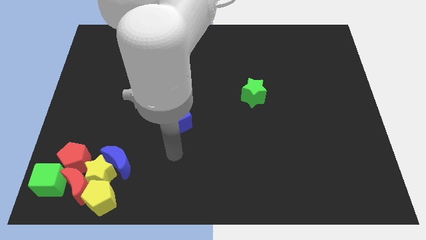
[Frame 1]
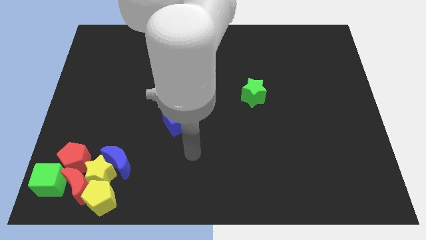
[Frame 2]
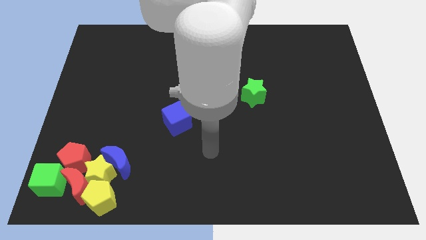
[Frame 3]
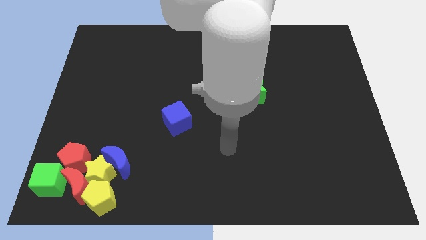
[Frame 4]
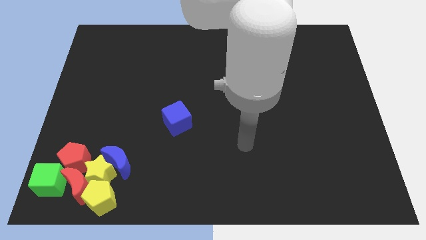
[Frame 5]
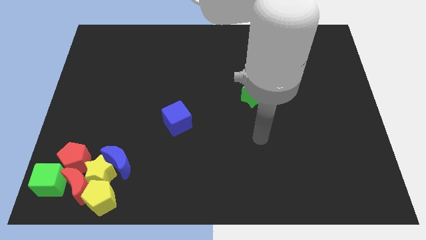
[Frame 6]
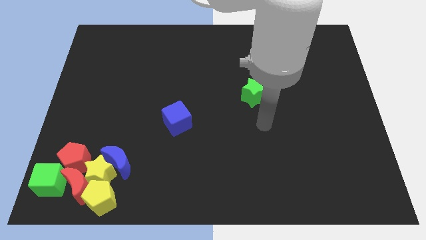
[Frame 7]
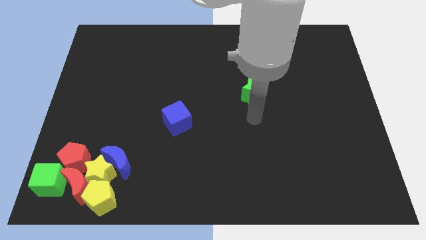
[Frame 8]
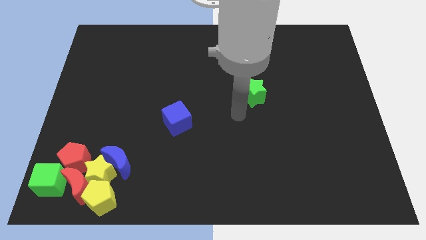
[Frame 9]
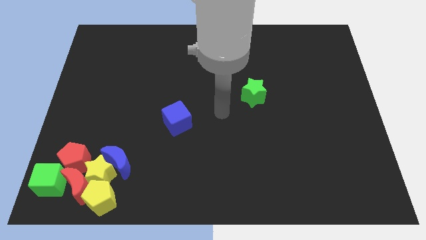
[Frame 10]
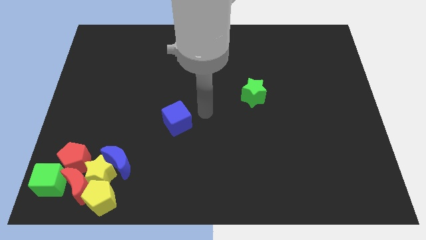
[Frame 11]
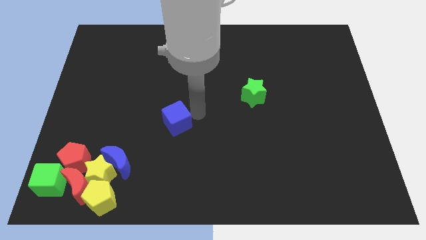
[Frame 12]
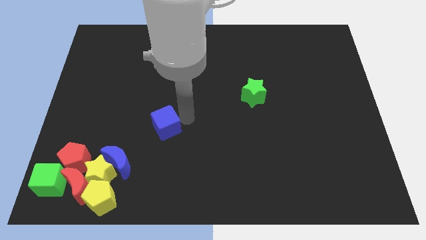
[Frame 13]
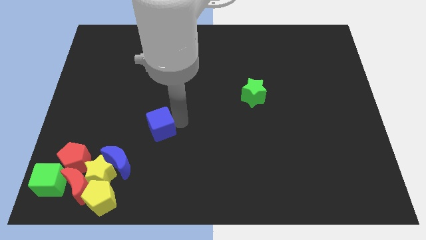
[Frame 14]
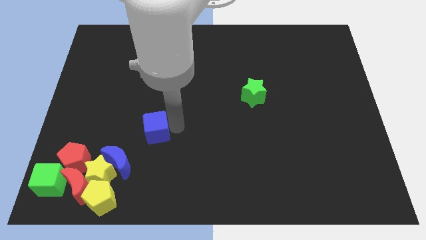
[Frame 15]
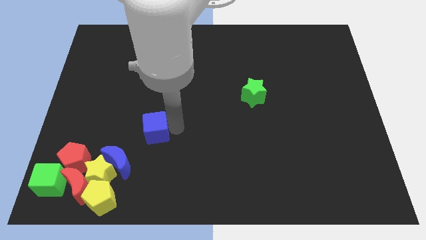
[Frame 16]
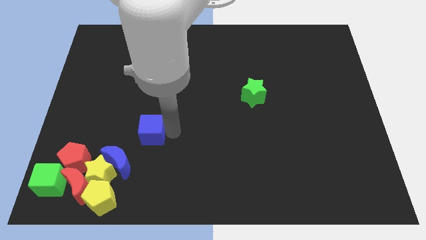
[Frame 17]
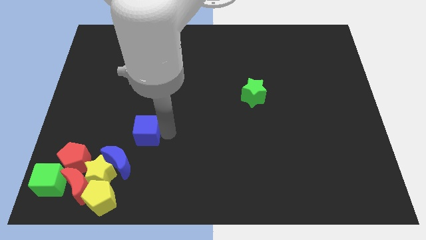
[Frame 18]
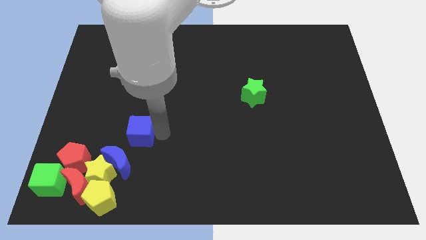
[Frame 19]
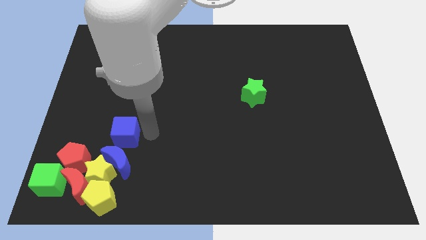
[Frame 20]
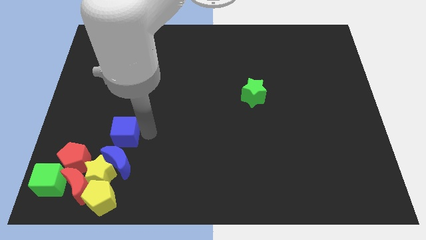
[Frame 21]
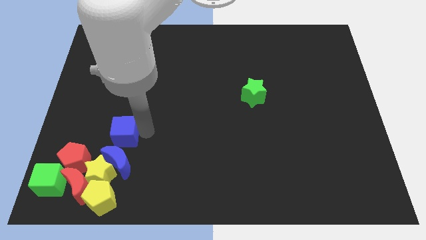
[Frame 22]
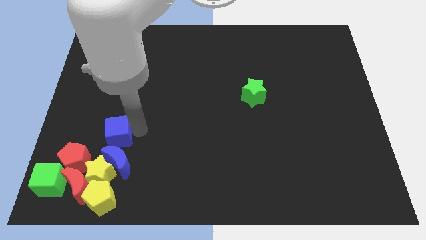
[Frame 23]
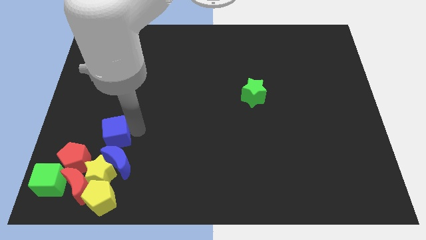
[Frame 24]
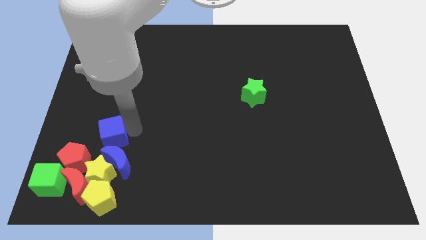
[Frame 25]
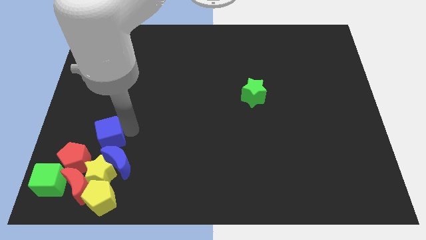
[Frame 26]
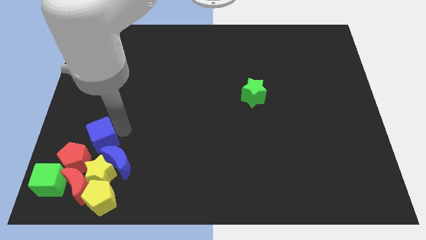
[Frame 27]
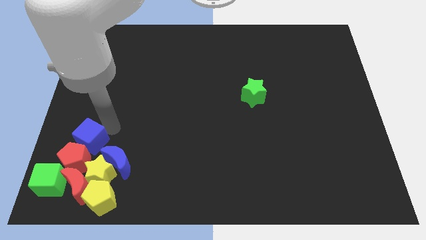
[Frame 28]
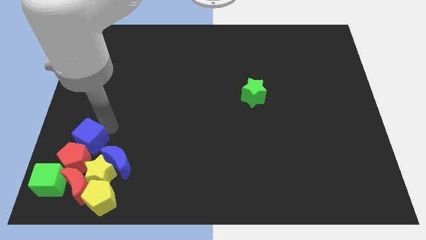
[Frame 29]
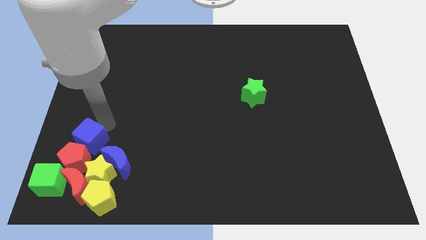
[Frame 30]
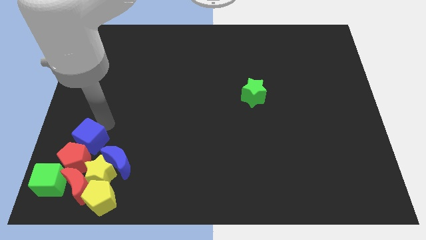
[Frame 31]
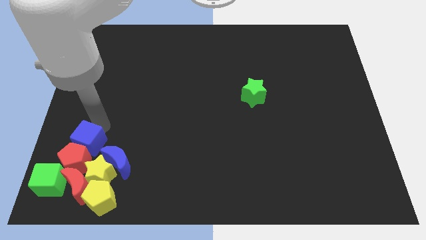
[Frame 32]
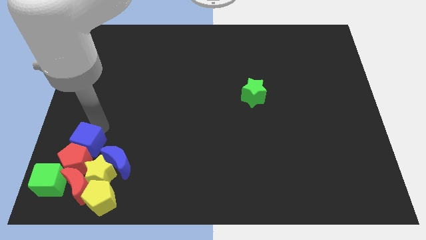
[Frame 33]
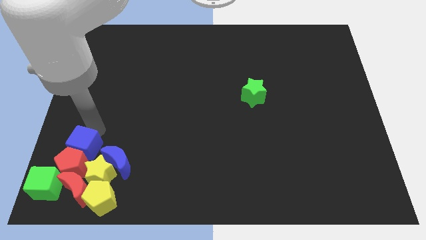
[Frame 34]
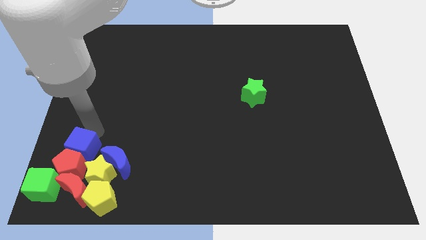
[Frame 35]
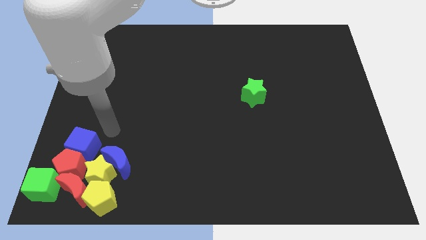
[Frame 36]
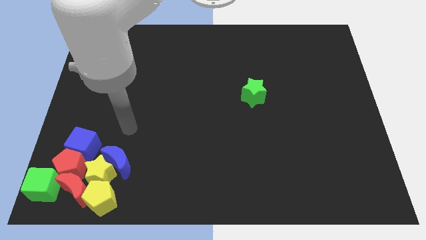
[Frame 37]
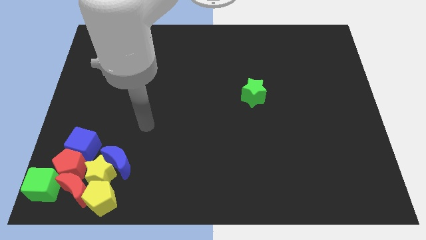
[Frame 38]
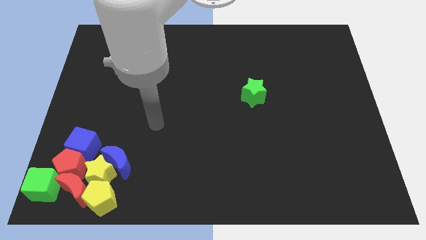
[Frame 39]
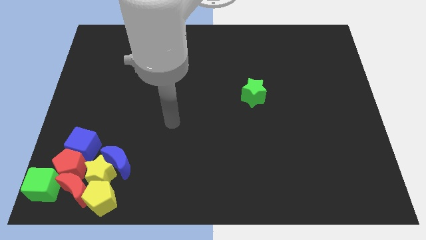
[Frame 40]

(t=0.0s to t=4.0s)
move the blue cube into the red pentagon

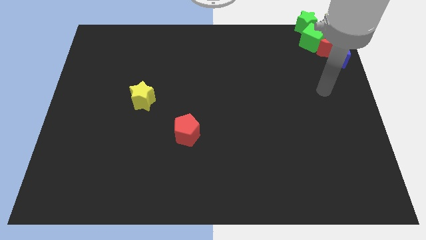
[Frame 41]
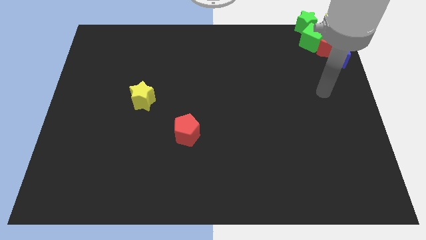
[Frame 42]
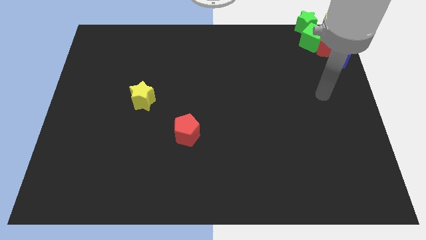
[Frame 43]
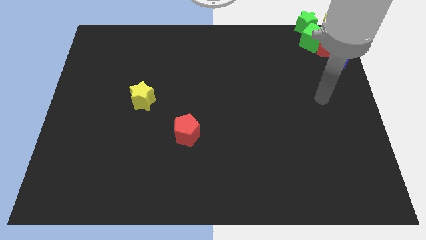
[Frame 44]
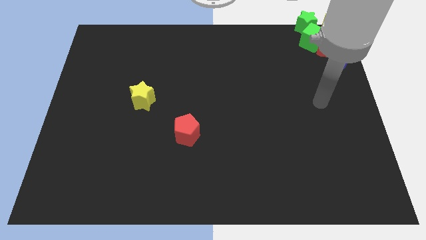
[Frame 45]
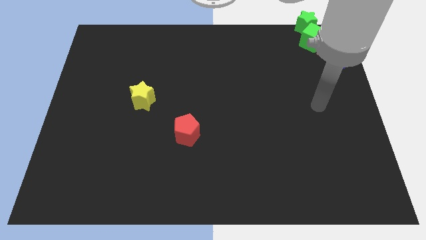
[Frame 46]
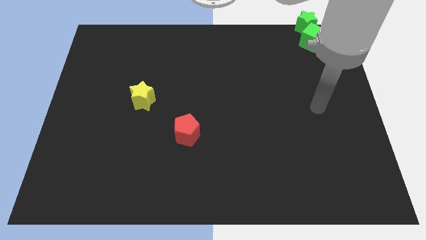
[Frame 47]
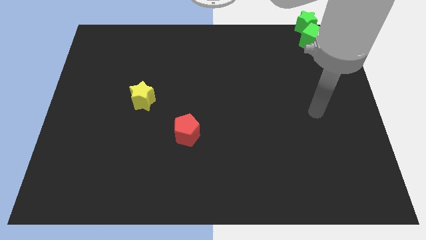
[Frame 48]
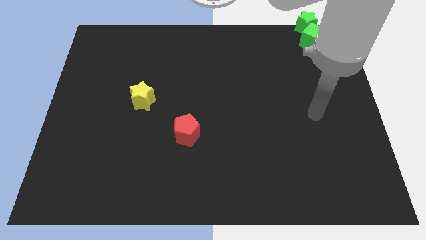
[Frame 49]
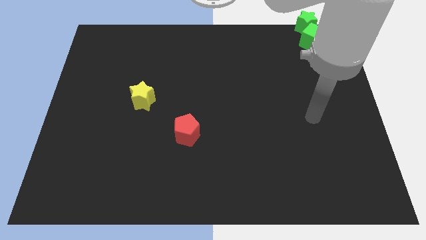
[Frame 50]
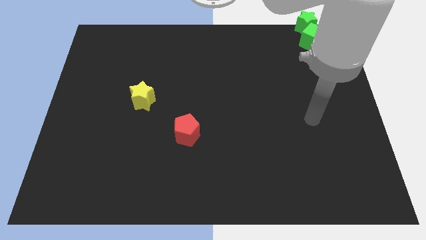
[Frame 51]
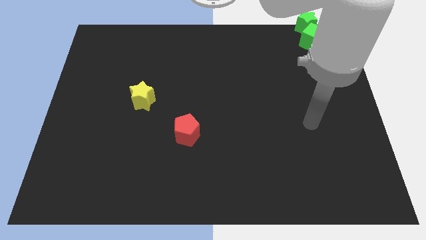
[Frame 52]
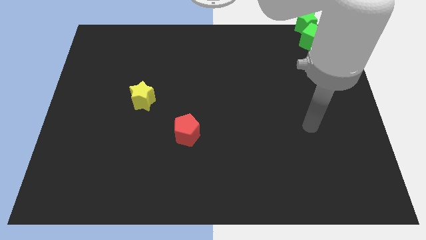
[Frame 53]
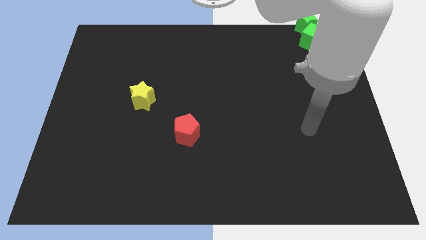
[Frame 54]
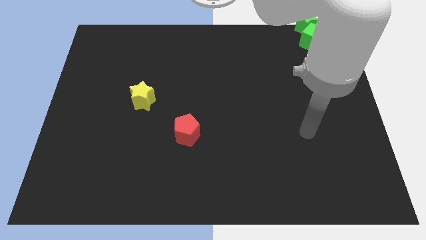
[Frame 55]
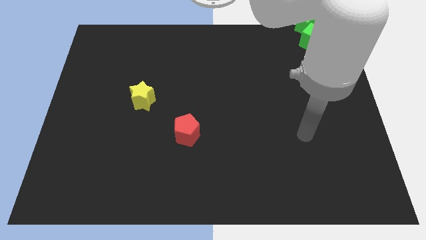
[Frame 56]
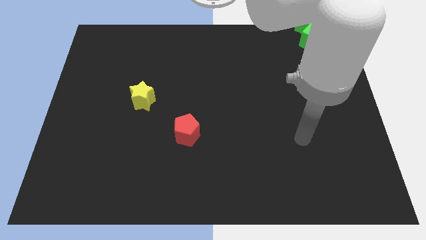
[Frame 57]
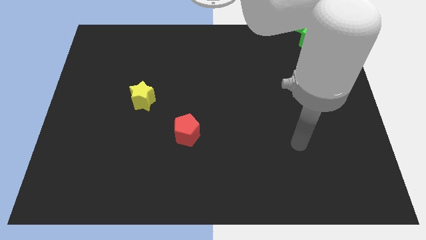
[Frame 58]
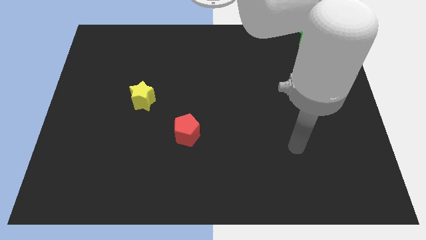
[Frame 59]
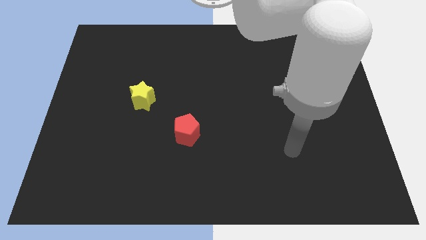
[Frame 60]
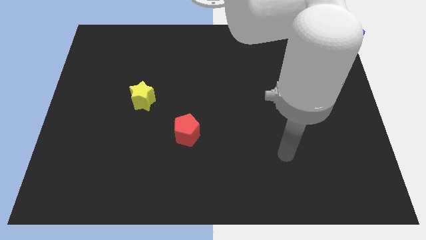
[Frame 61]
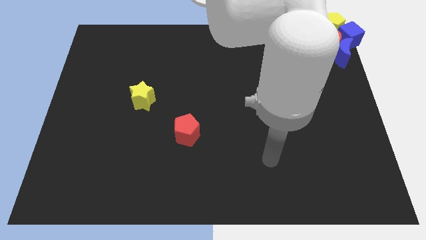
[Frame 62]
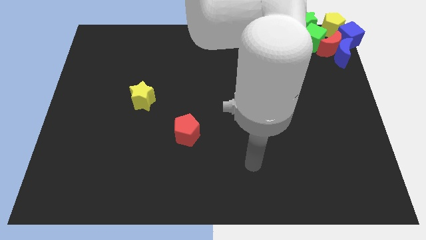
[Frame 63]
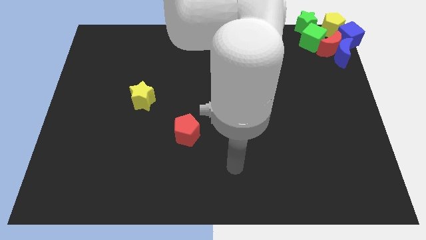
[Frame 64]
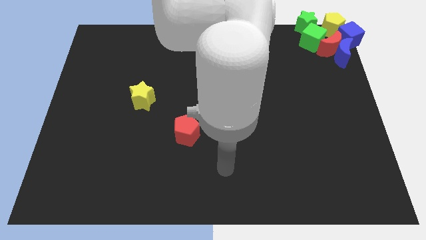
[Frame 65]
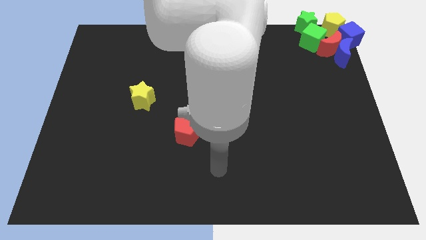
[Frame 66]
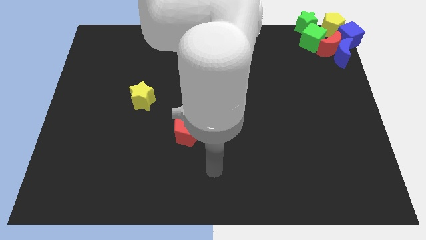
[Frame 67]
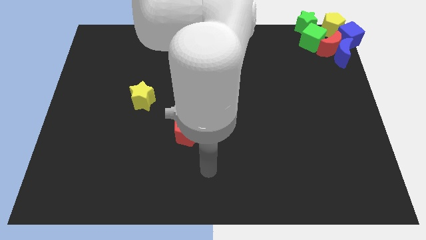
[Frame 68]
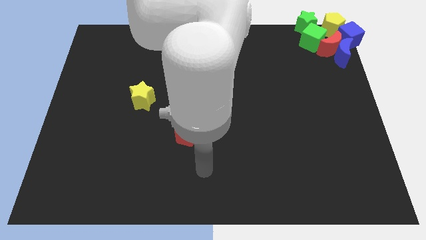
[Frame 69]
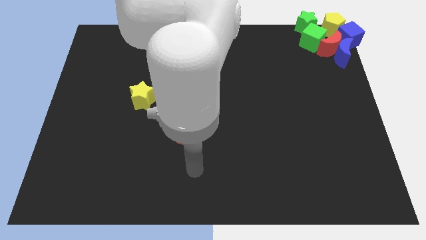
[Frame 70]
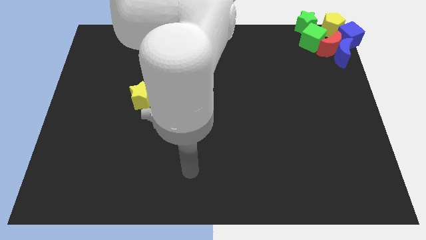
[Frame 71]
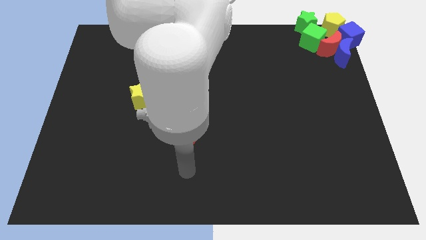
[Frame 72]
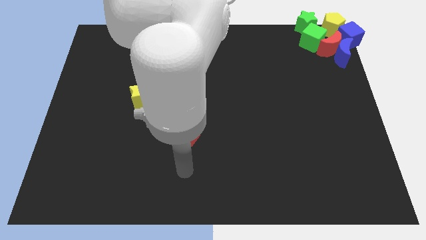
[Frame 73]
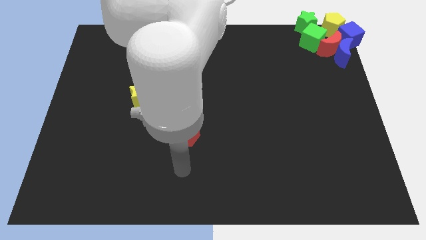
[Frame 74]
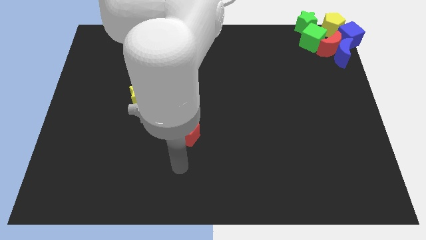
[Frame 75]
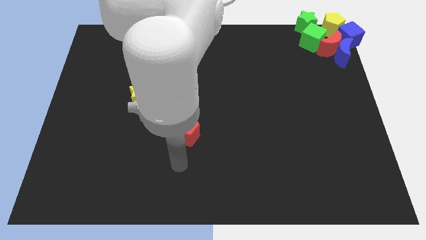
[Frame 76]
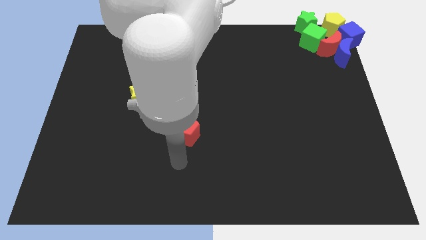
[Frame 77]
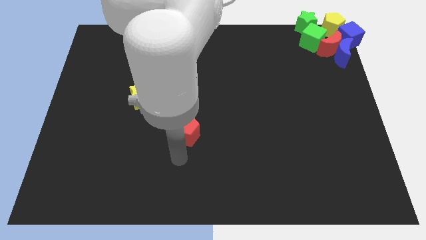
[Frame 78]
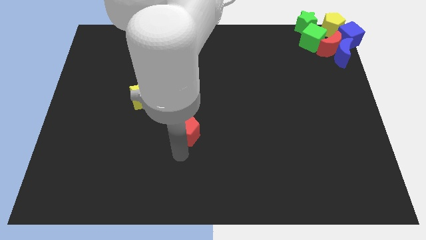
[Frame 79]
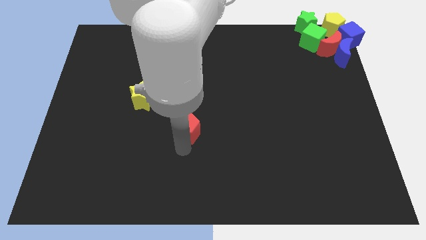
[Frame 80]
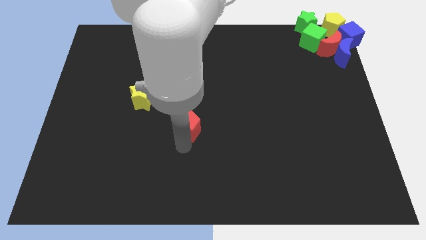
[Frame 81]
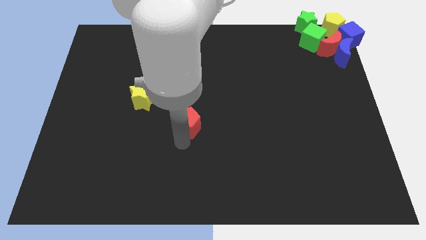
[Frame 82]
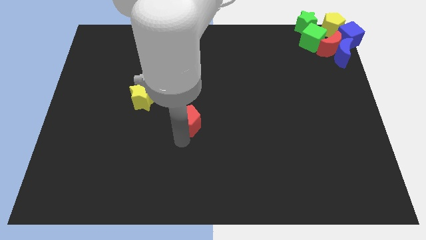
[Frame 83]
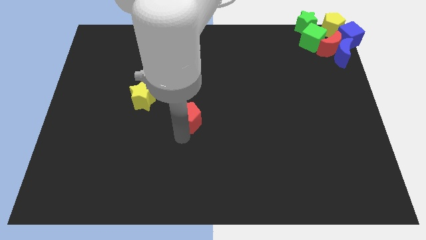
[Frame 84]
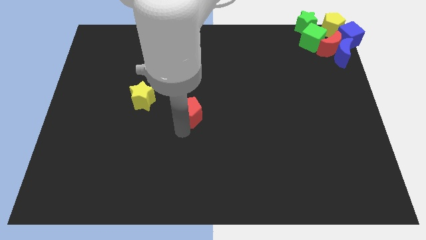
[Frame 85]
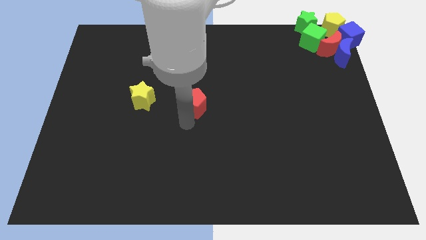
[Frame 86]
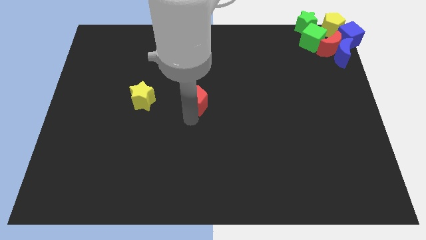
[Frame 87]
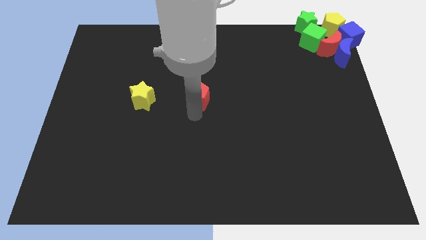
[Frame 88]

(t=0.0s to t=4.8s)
put the red pentagon to the right side of the yellow star

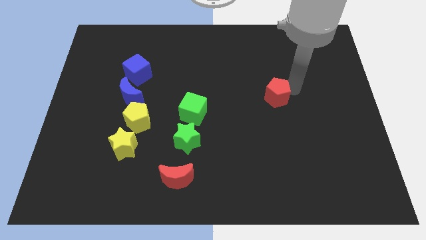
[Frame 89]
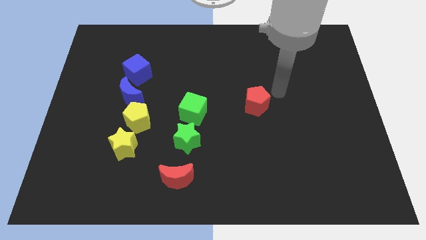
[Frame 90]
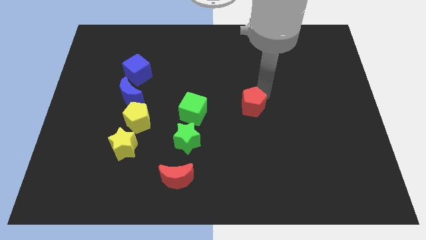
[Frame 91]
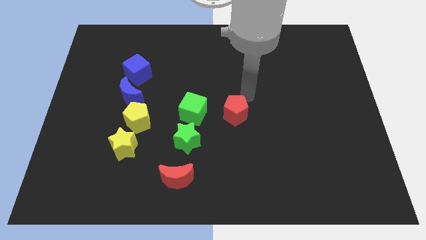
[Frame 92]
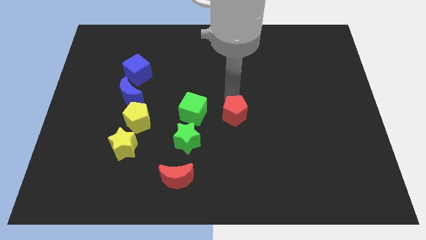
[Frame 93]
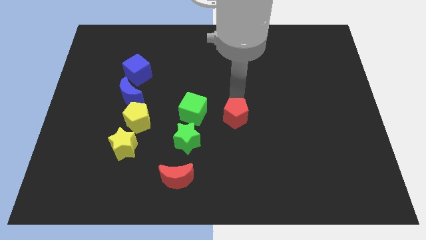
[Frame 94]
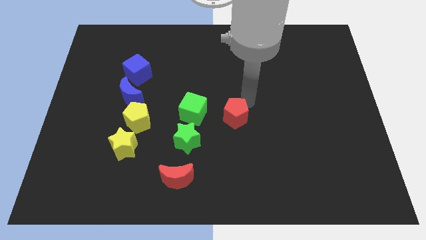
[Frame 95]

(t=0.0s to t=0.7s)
move the red pentagon to the right of the green cube
